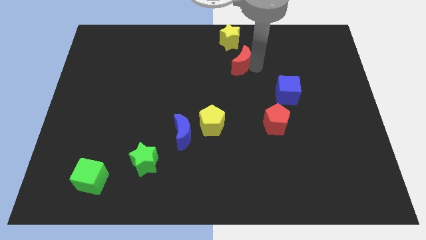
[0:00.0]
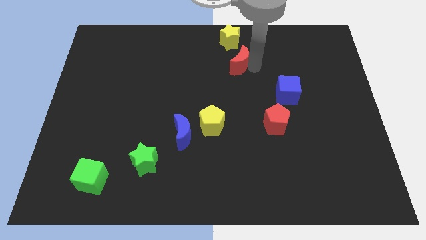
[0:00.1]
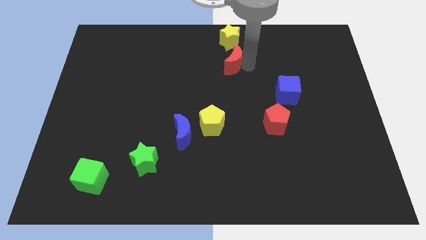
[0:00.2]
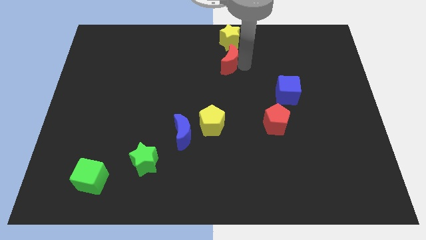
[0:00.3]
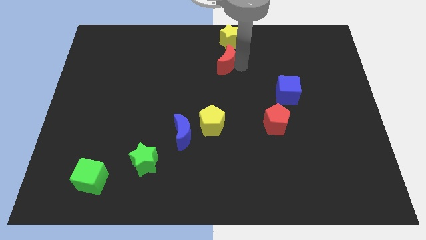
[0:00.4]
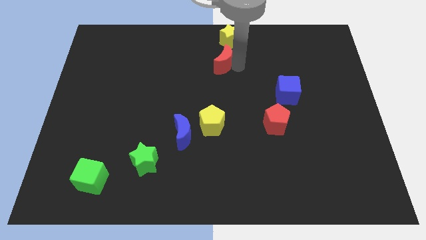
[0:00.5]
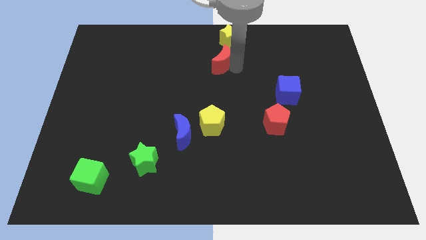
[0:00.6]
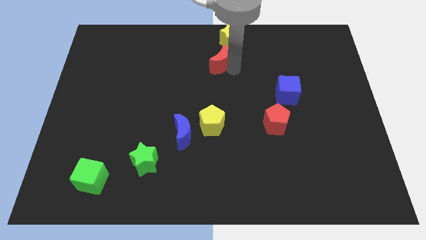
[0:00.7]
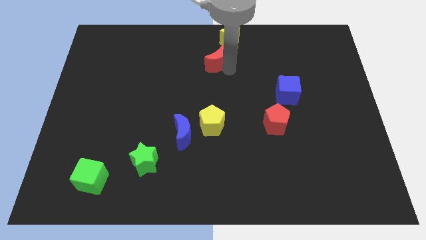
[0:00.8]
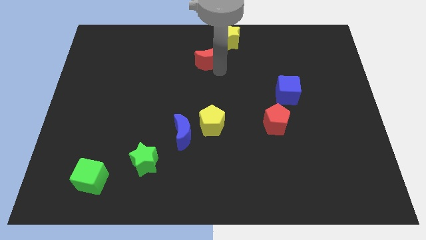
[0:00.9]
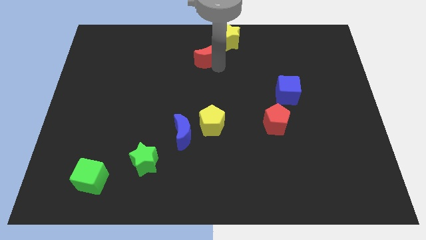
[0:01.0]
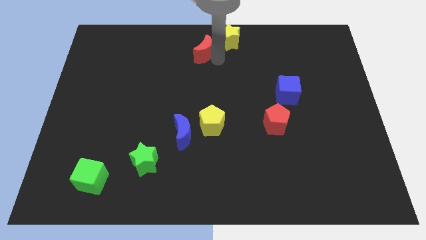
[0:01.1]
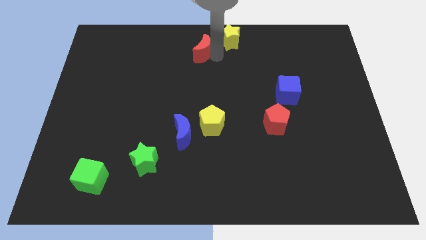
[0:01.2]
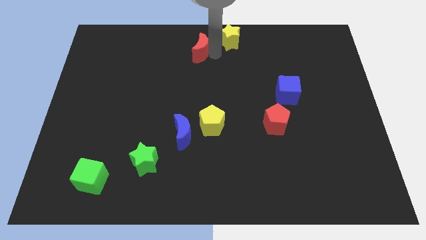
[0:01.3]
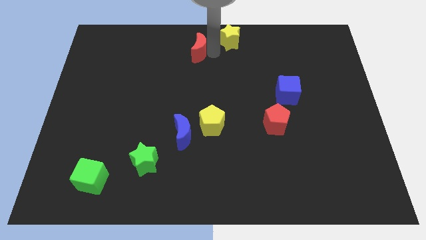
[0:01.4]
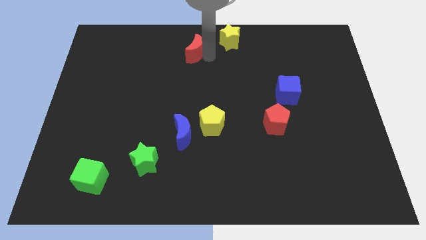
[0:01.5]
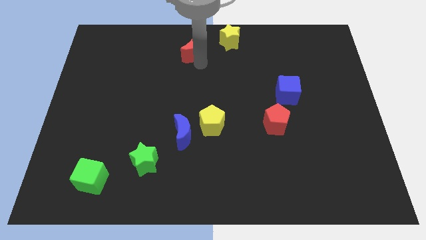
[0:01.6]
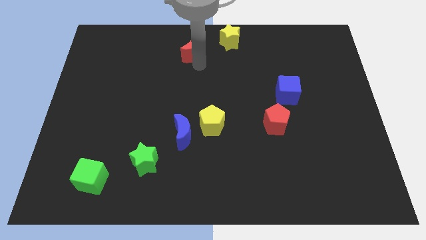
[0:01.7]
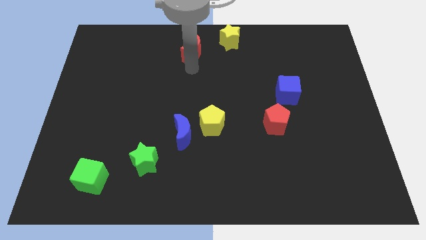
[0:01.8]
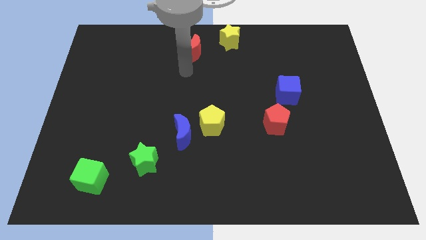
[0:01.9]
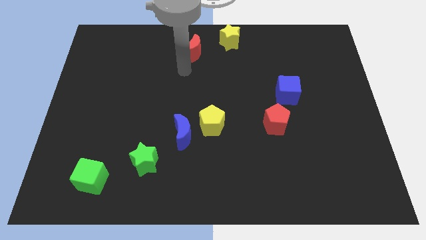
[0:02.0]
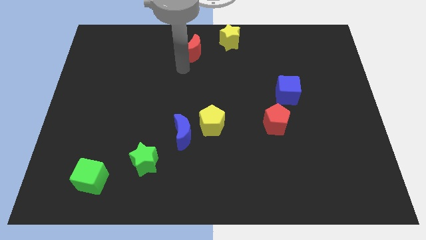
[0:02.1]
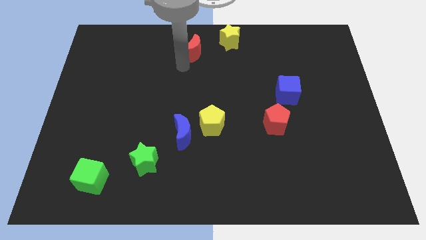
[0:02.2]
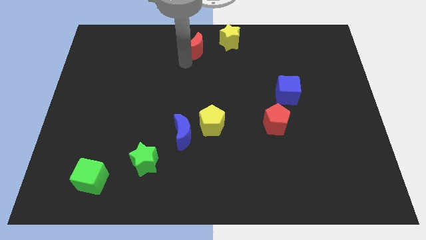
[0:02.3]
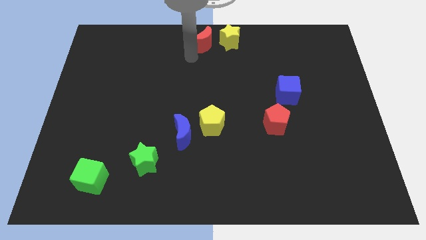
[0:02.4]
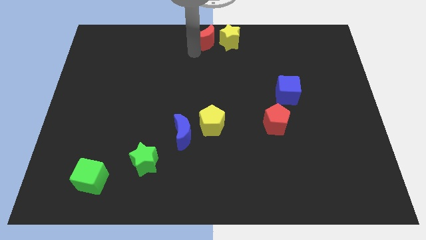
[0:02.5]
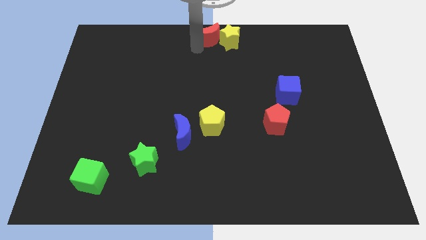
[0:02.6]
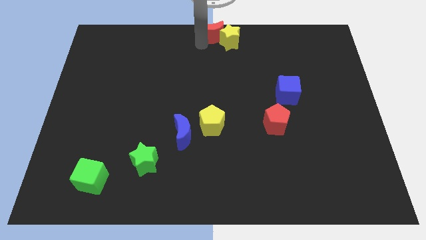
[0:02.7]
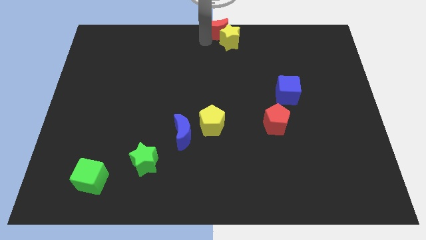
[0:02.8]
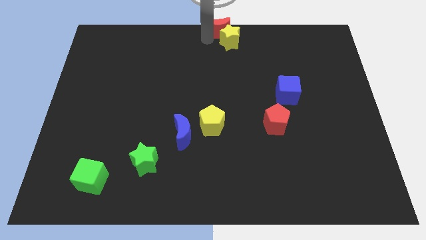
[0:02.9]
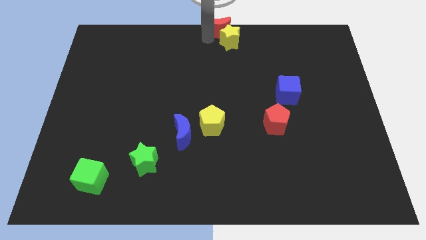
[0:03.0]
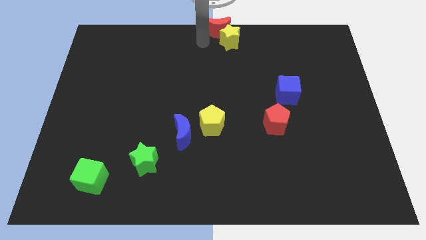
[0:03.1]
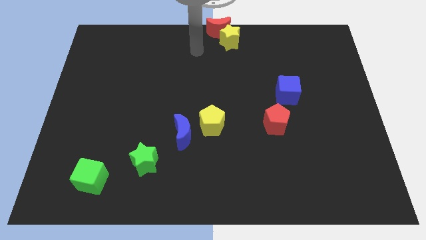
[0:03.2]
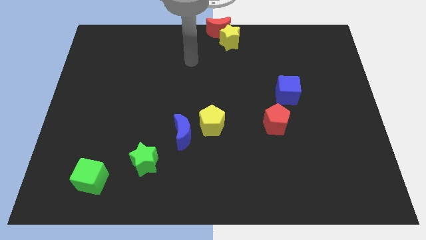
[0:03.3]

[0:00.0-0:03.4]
place red moon on the top of yellow star

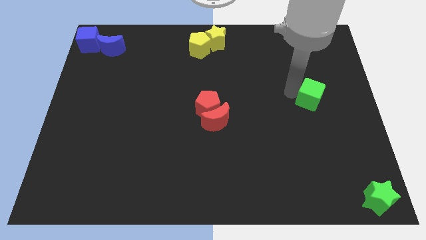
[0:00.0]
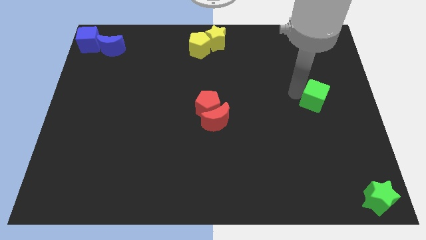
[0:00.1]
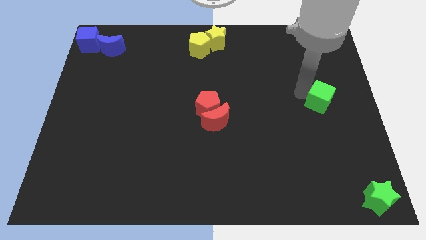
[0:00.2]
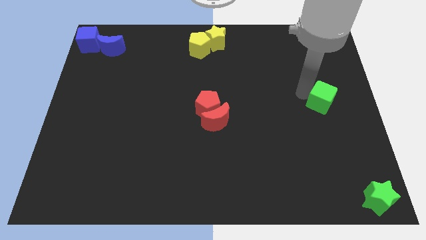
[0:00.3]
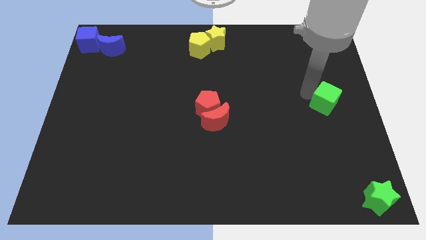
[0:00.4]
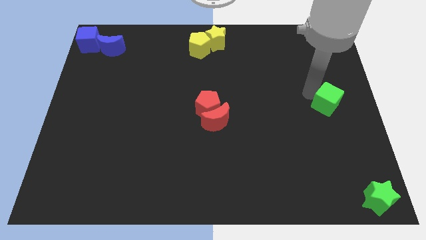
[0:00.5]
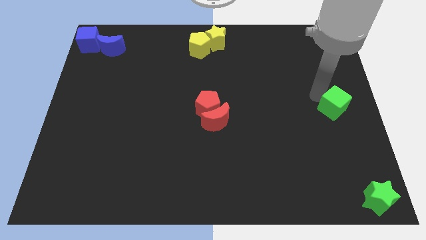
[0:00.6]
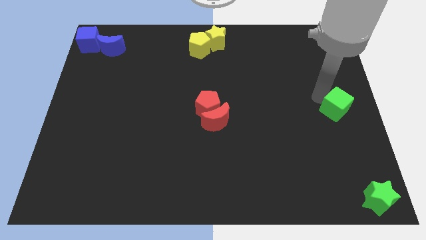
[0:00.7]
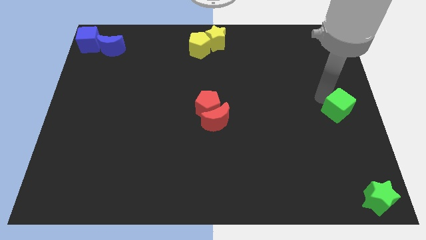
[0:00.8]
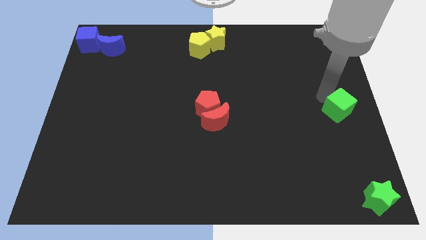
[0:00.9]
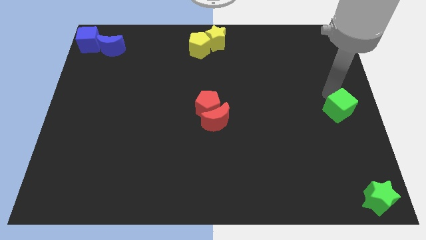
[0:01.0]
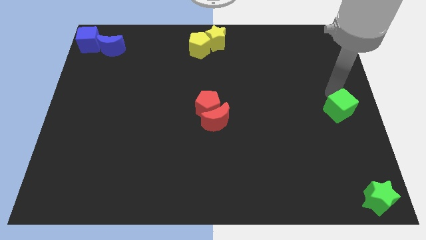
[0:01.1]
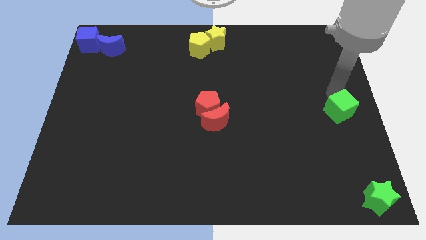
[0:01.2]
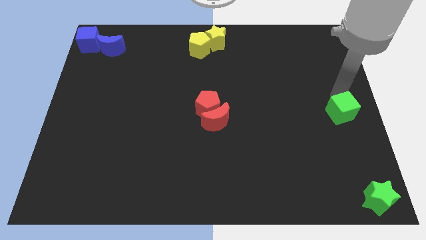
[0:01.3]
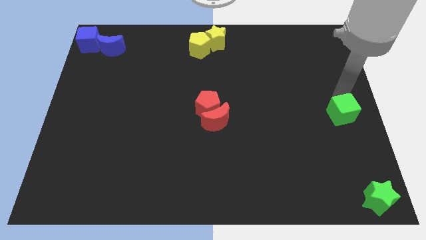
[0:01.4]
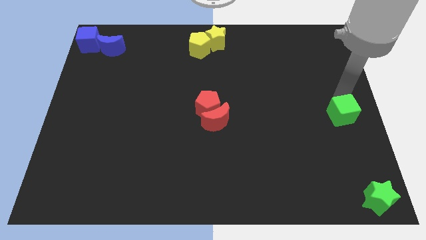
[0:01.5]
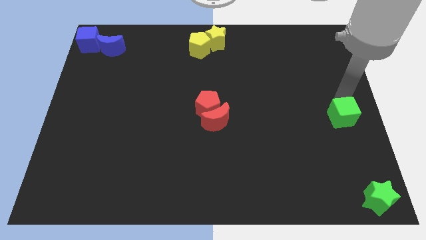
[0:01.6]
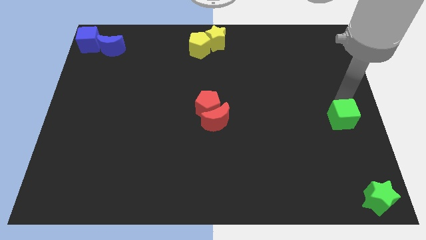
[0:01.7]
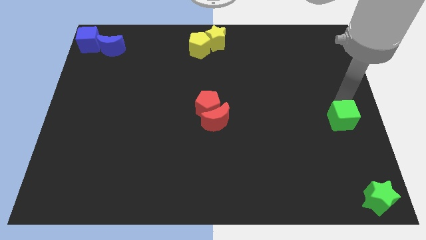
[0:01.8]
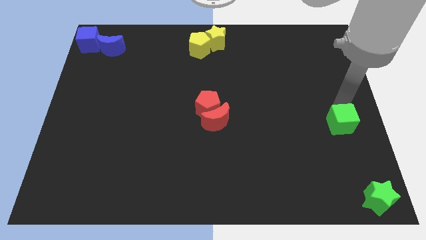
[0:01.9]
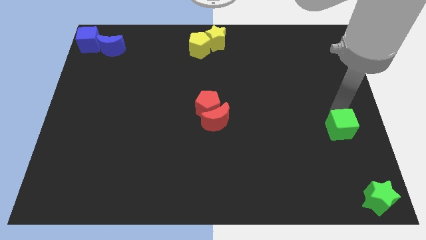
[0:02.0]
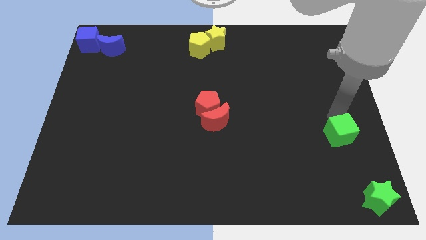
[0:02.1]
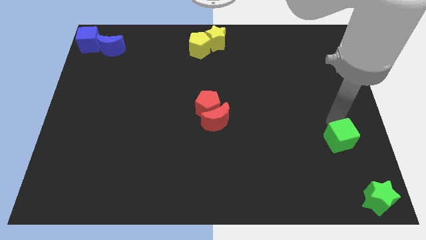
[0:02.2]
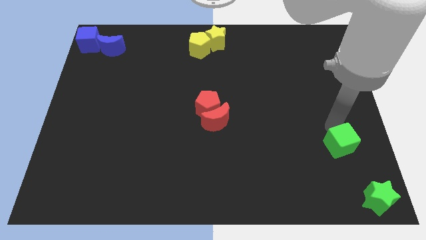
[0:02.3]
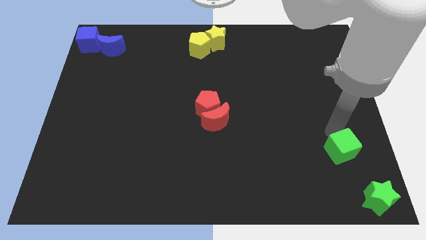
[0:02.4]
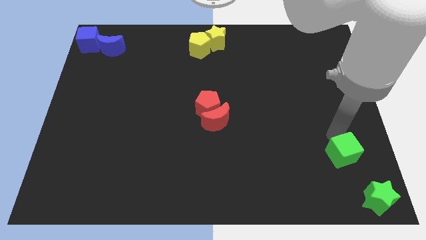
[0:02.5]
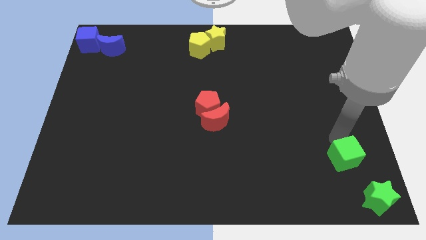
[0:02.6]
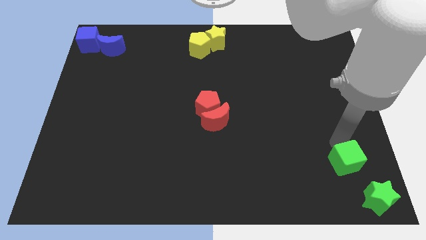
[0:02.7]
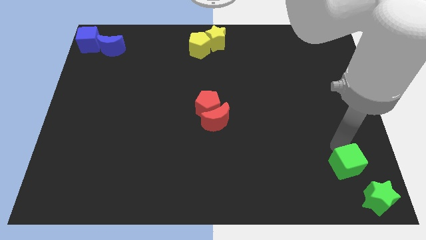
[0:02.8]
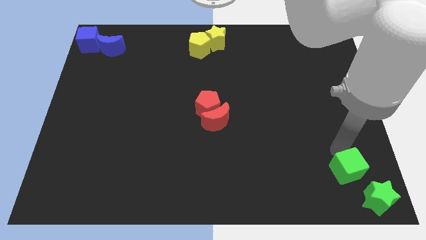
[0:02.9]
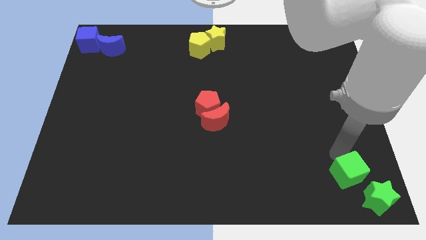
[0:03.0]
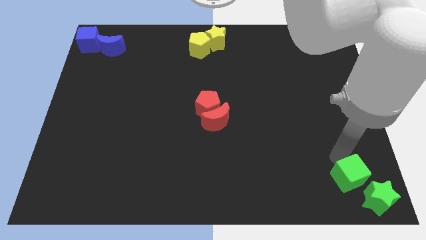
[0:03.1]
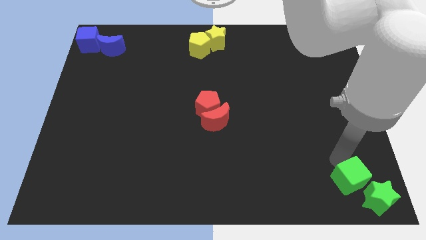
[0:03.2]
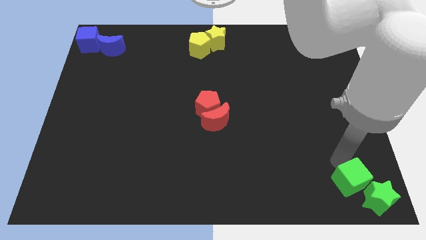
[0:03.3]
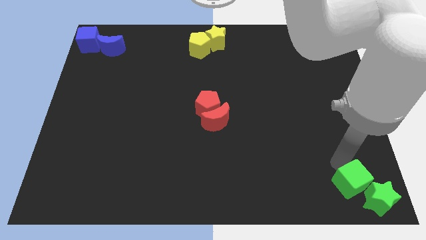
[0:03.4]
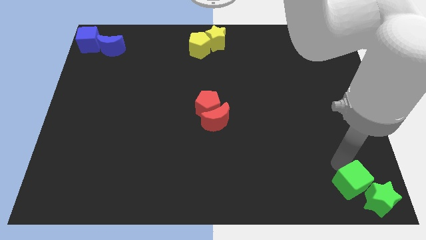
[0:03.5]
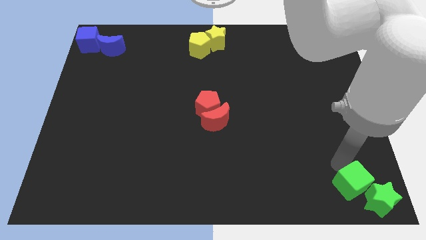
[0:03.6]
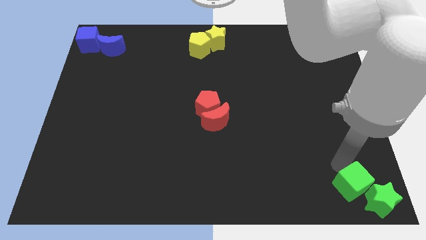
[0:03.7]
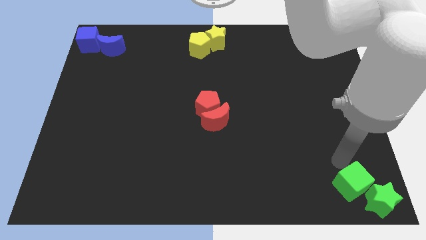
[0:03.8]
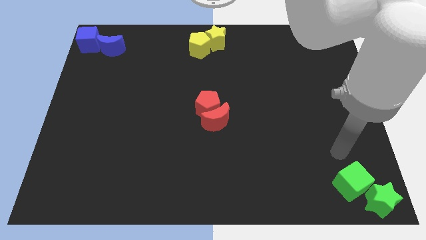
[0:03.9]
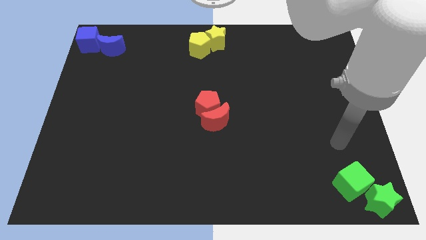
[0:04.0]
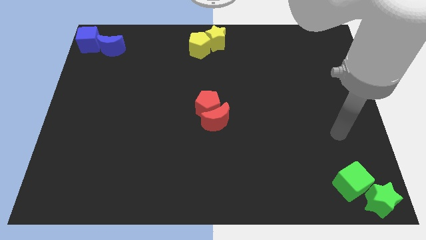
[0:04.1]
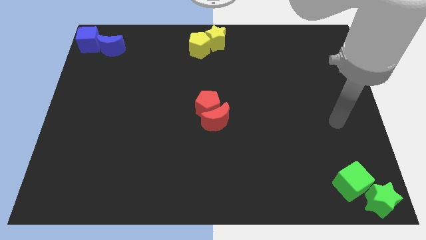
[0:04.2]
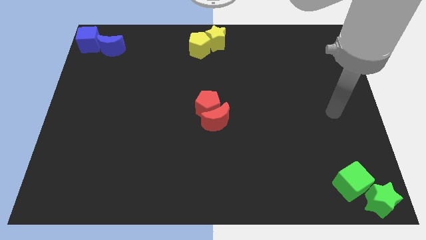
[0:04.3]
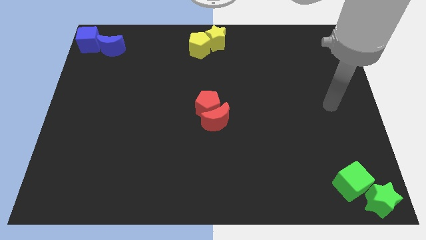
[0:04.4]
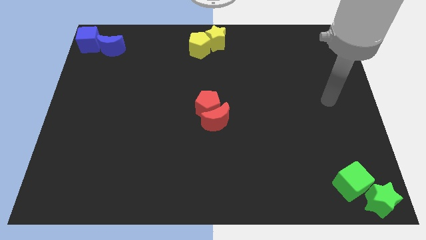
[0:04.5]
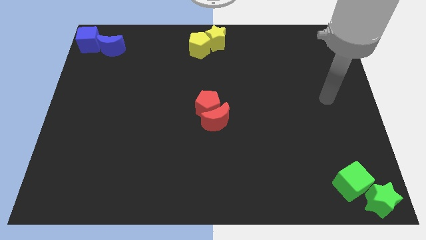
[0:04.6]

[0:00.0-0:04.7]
push the green cube into the green star

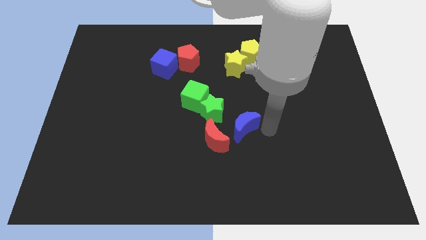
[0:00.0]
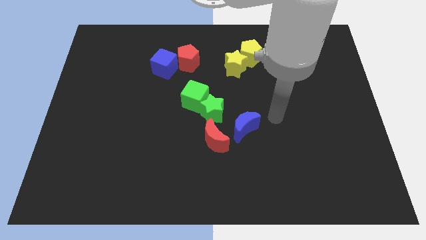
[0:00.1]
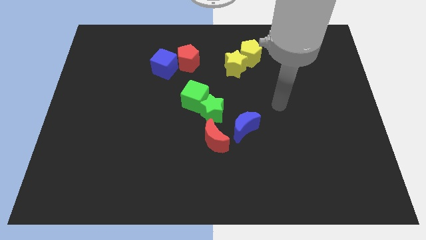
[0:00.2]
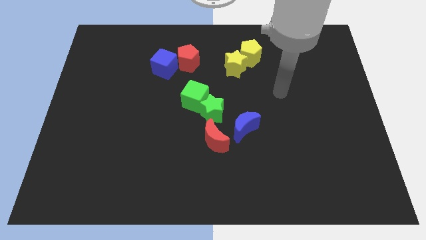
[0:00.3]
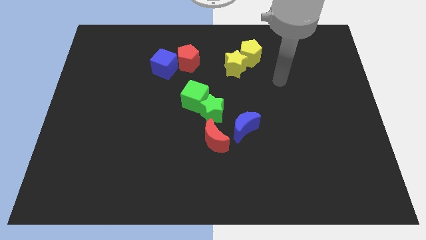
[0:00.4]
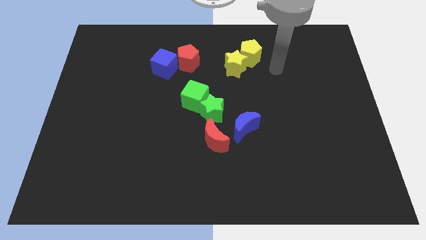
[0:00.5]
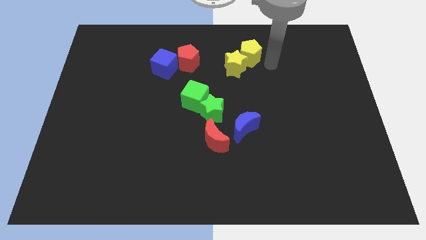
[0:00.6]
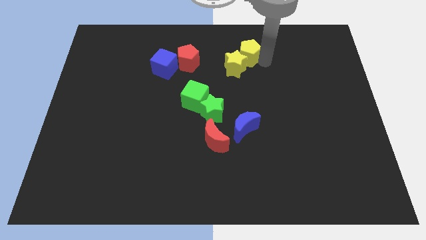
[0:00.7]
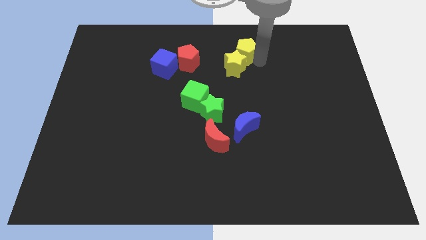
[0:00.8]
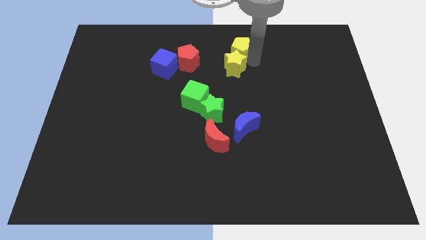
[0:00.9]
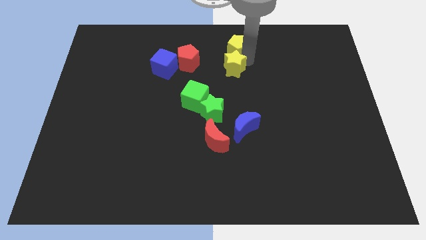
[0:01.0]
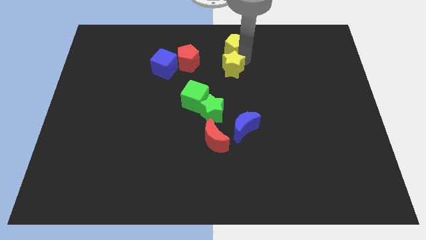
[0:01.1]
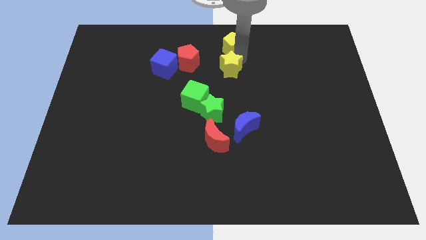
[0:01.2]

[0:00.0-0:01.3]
push the yellow pentagon slightly to the left
